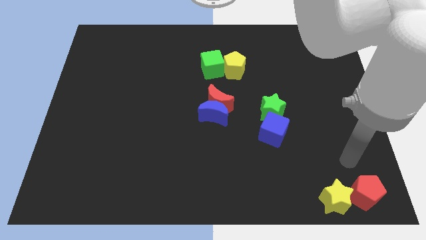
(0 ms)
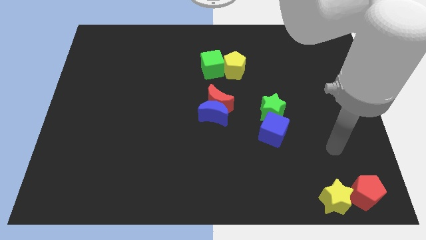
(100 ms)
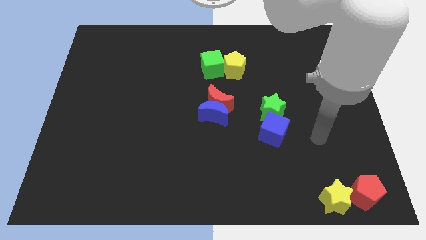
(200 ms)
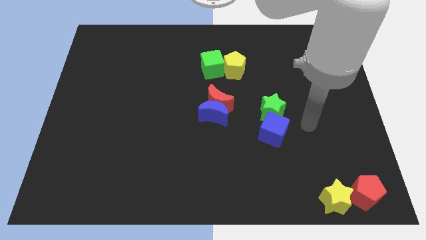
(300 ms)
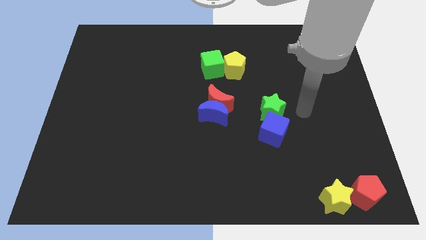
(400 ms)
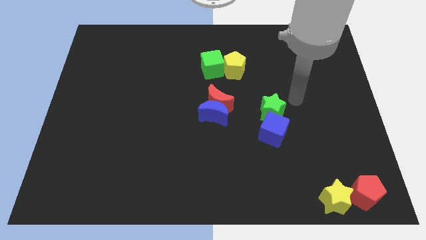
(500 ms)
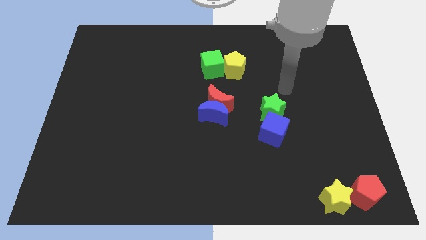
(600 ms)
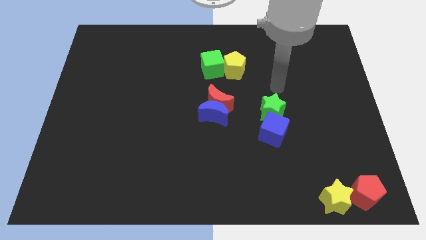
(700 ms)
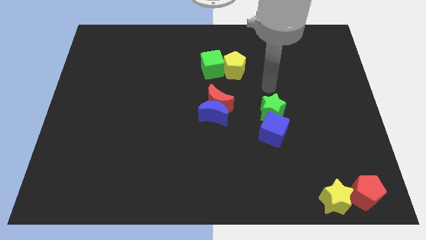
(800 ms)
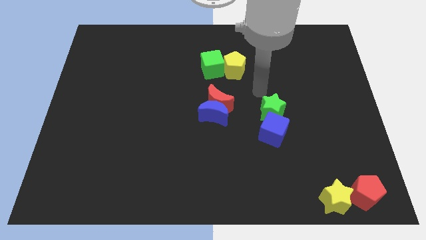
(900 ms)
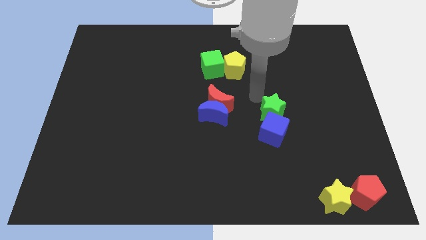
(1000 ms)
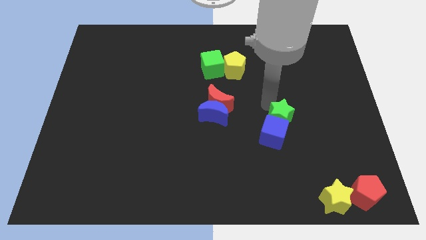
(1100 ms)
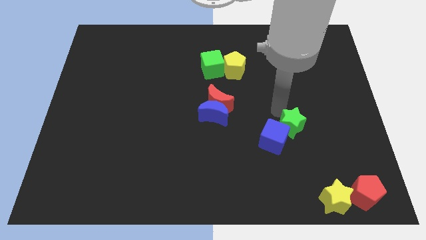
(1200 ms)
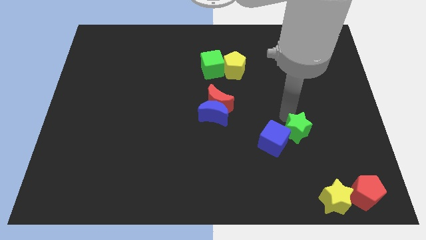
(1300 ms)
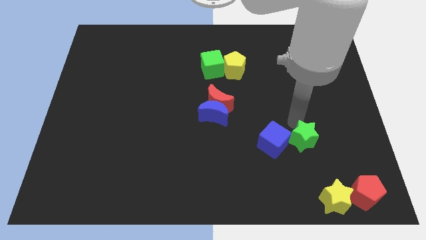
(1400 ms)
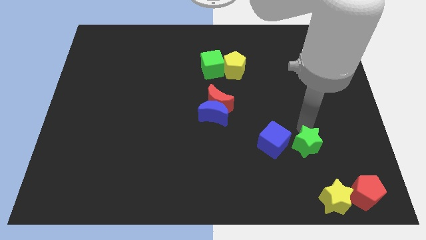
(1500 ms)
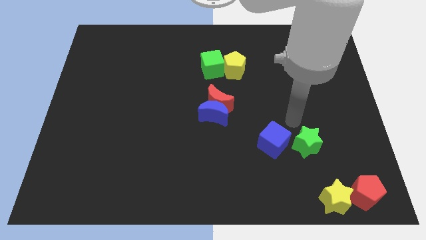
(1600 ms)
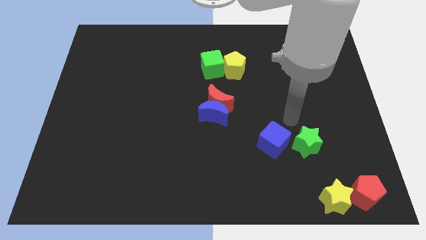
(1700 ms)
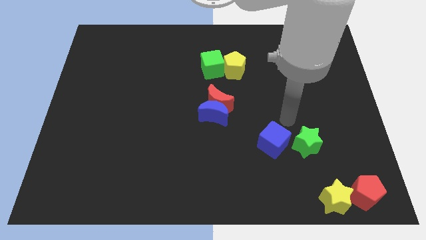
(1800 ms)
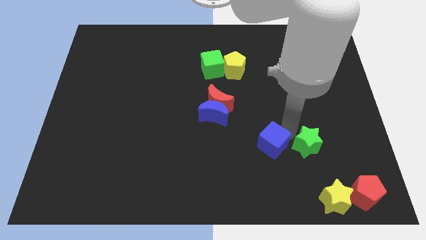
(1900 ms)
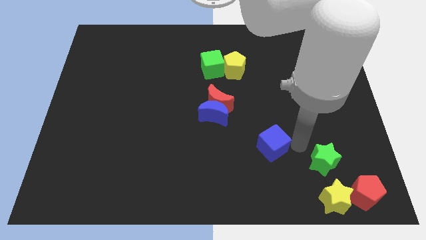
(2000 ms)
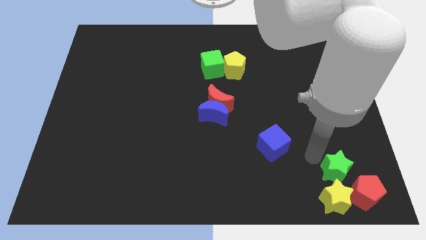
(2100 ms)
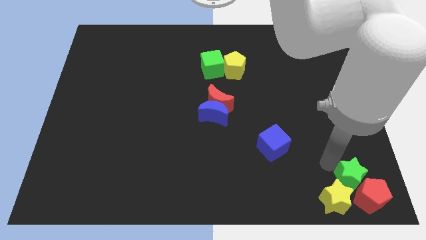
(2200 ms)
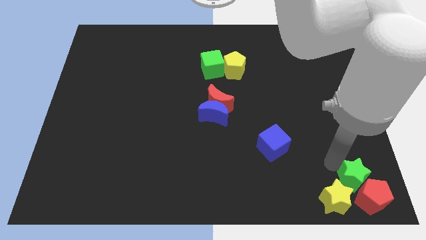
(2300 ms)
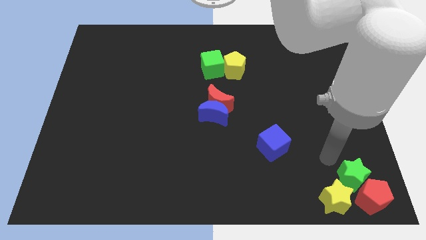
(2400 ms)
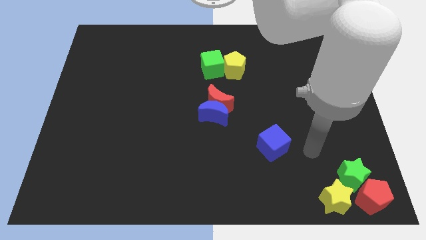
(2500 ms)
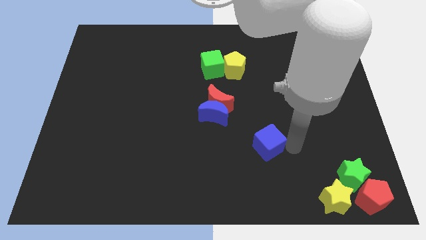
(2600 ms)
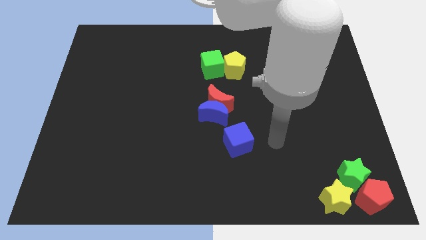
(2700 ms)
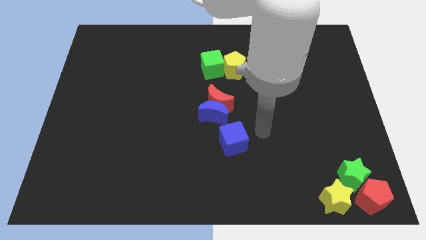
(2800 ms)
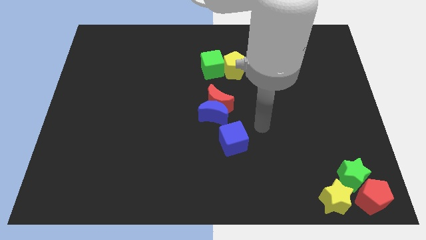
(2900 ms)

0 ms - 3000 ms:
push green star into yellow star and red pentagon

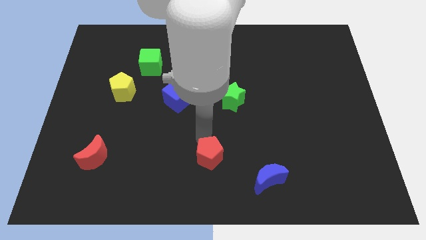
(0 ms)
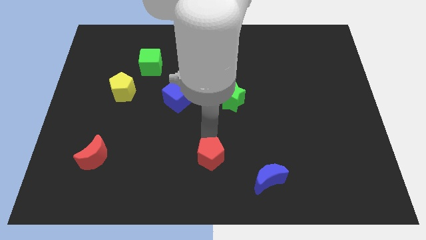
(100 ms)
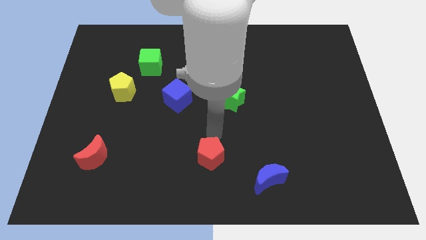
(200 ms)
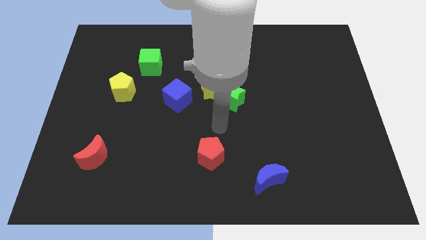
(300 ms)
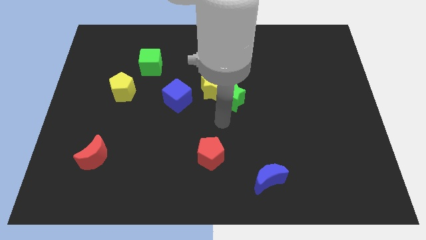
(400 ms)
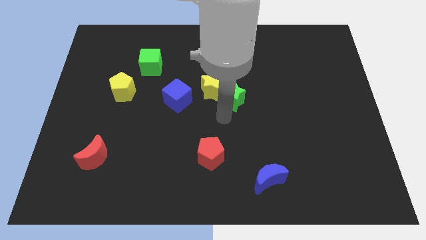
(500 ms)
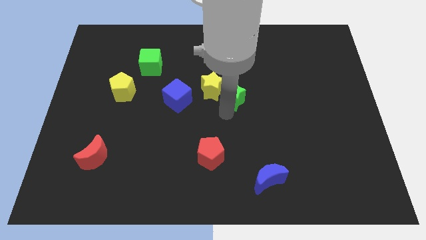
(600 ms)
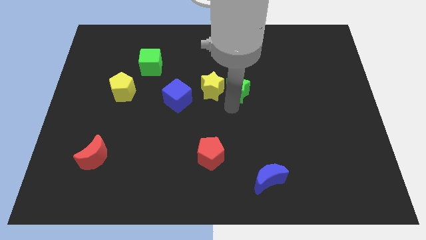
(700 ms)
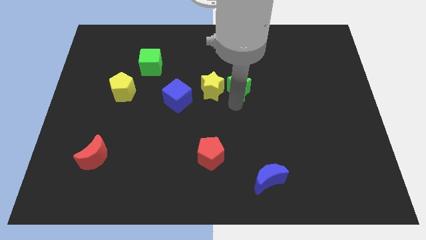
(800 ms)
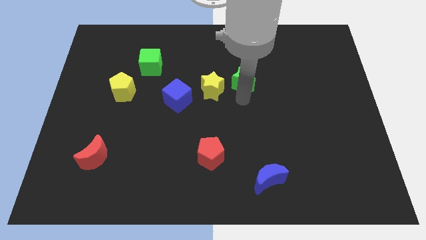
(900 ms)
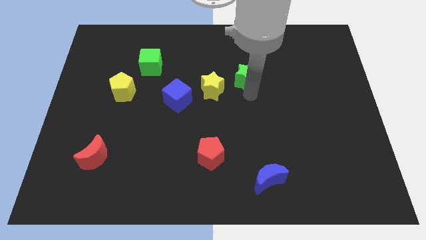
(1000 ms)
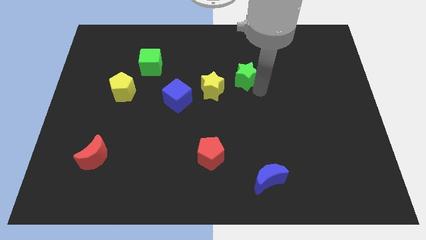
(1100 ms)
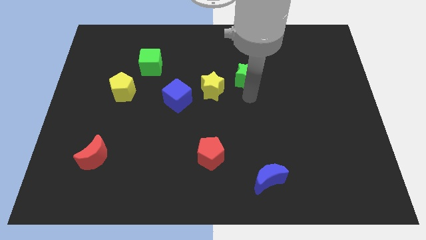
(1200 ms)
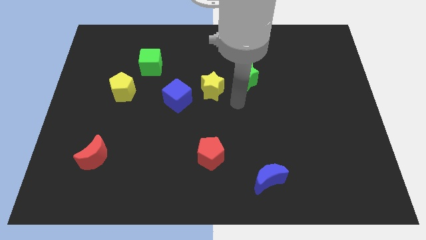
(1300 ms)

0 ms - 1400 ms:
push the green star towards the top side of the board

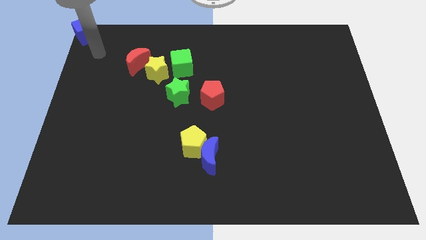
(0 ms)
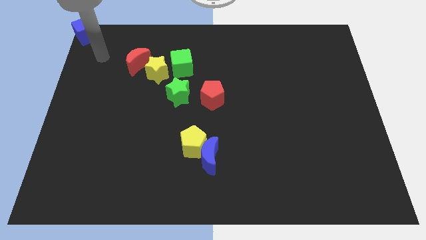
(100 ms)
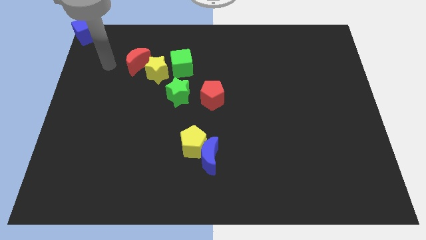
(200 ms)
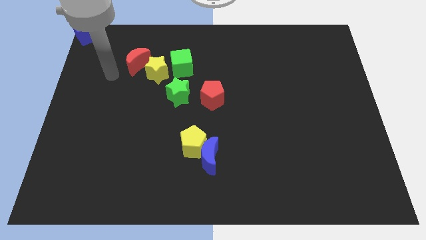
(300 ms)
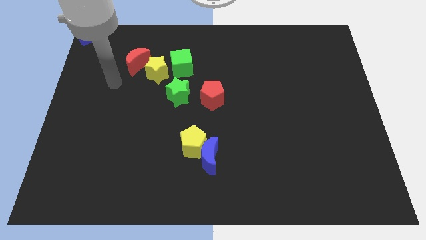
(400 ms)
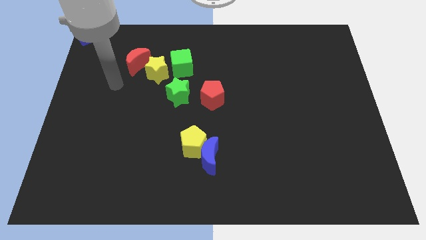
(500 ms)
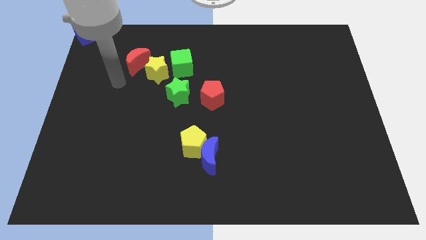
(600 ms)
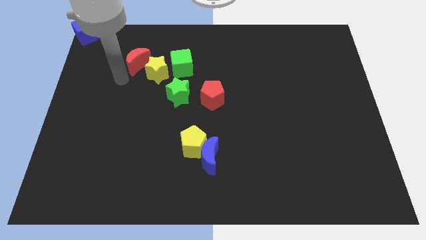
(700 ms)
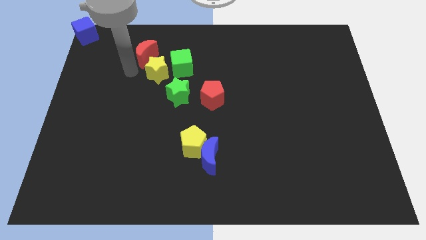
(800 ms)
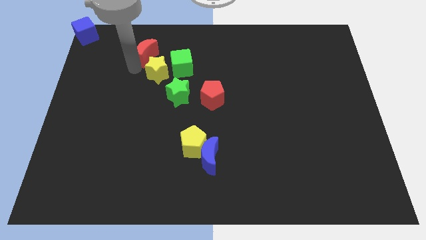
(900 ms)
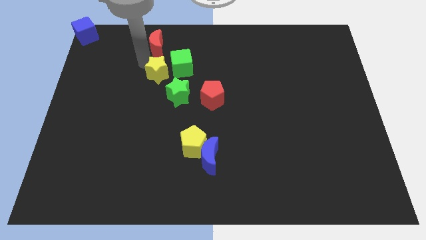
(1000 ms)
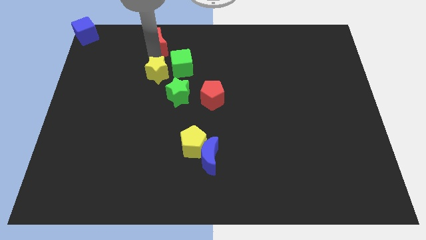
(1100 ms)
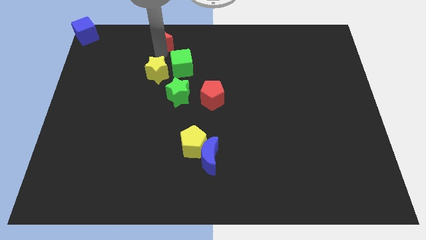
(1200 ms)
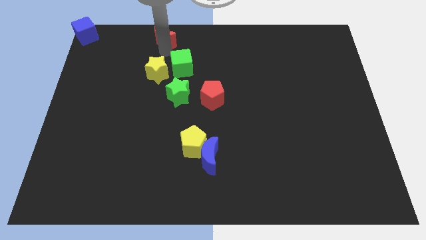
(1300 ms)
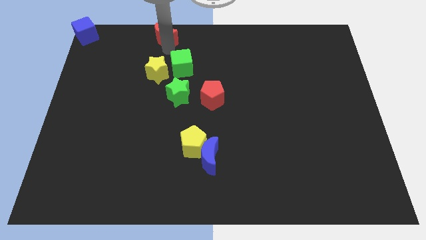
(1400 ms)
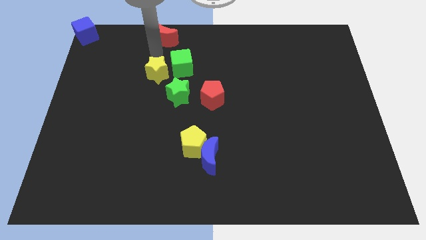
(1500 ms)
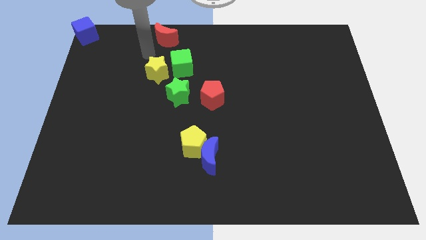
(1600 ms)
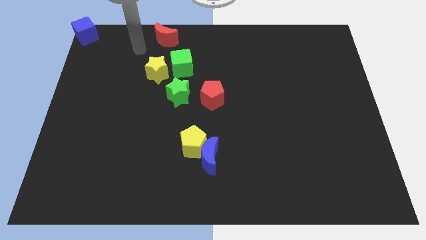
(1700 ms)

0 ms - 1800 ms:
push the red crescent away from the yellow star

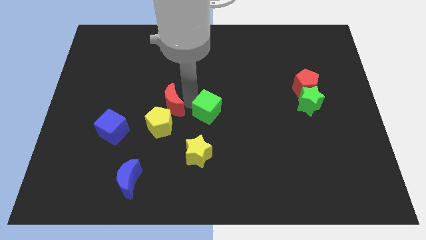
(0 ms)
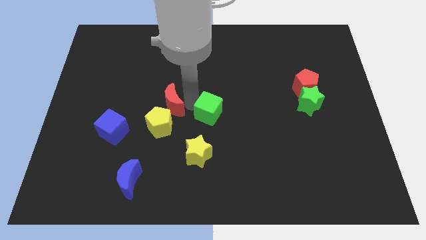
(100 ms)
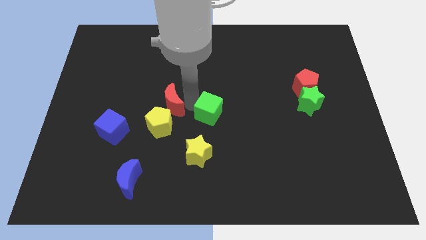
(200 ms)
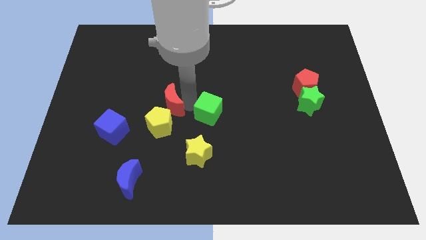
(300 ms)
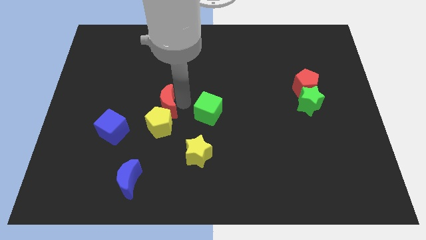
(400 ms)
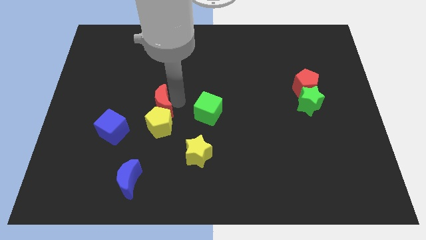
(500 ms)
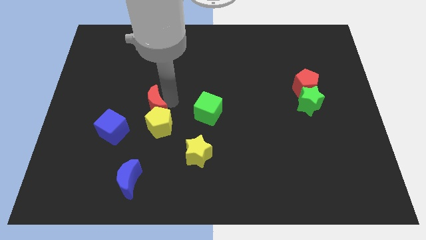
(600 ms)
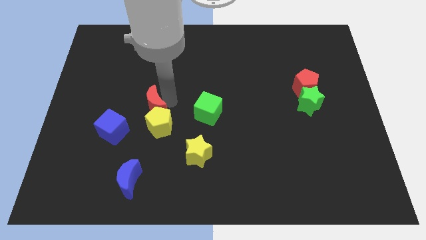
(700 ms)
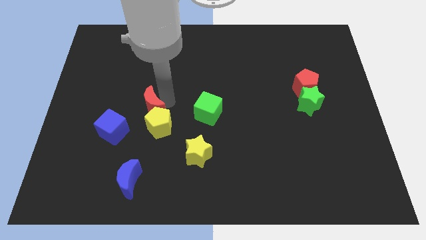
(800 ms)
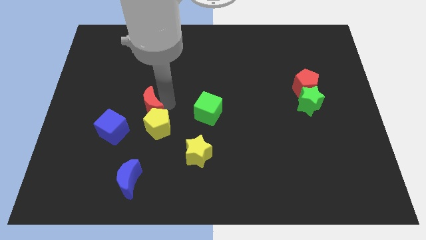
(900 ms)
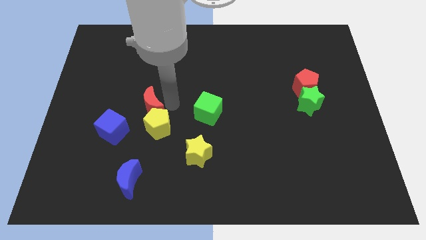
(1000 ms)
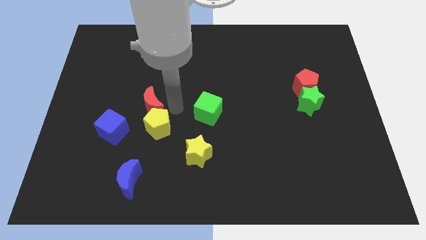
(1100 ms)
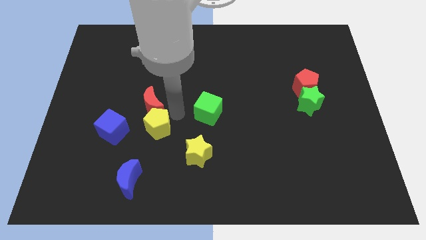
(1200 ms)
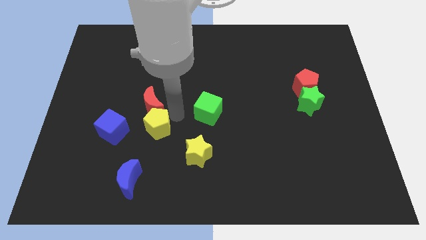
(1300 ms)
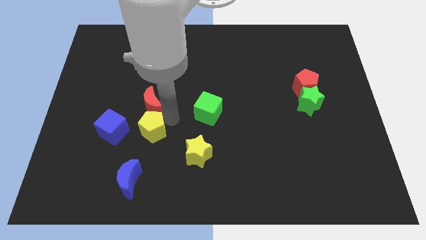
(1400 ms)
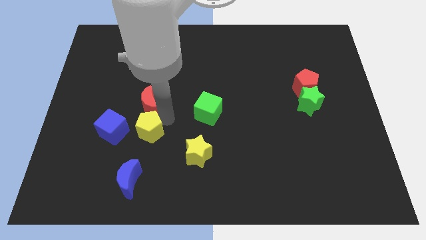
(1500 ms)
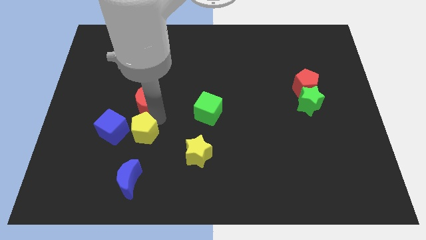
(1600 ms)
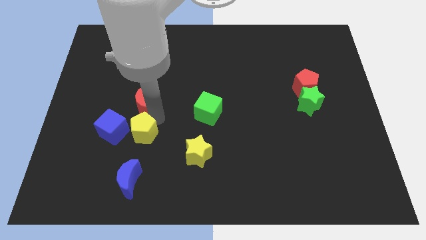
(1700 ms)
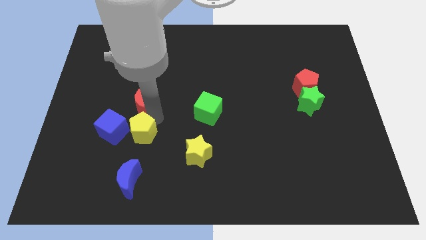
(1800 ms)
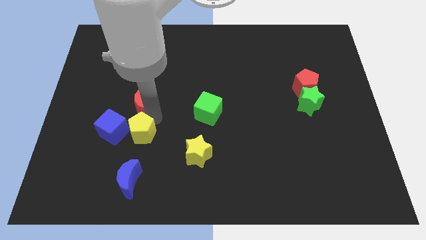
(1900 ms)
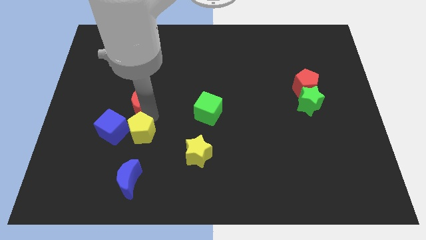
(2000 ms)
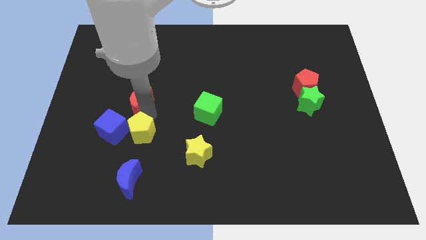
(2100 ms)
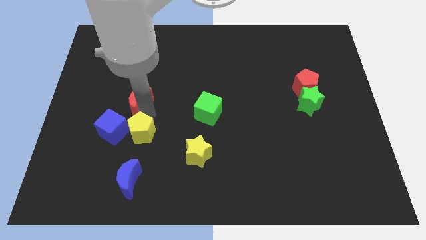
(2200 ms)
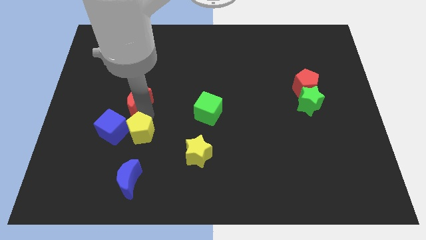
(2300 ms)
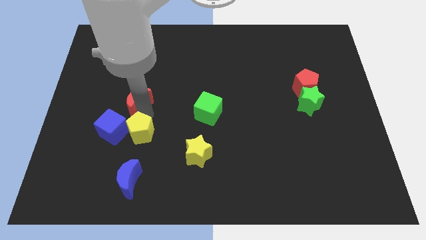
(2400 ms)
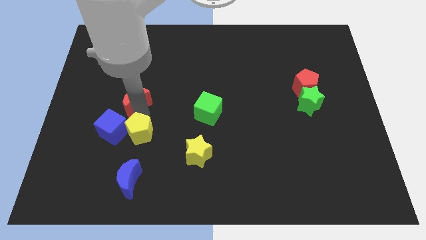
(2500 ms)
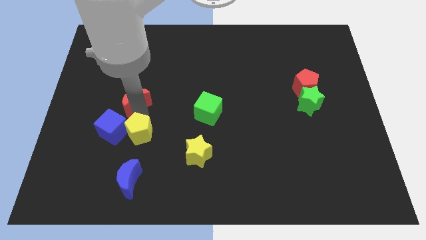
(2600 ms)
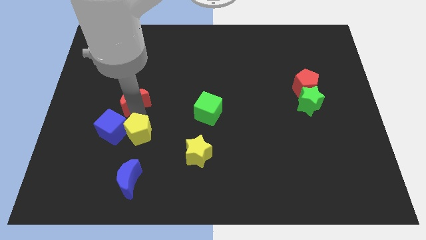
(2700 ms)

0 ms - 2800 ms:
move red moon near blue cube

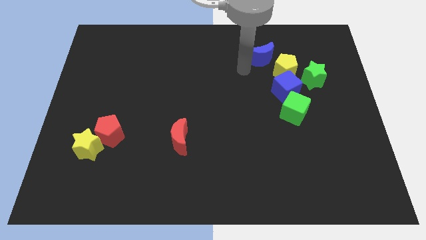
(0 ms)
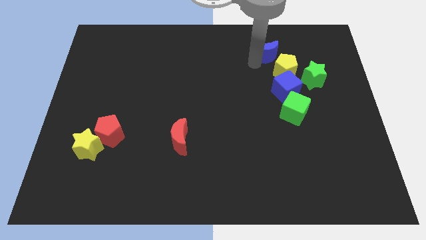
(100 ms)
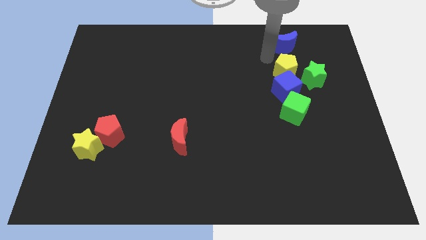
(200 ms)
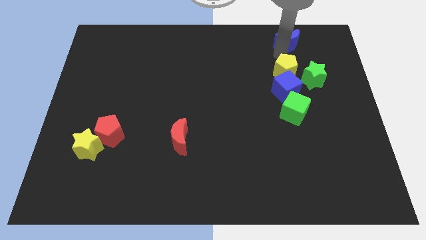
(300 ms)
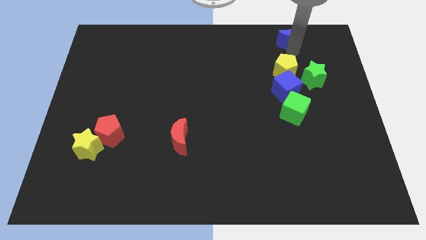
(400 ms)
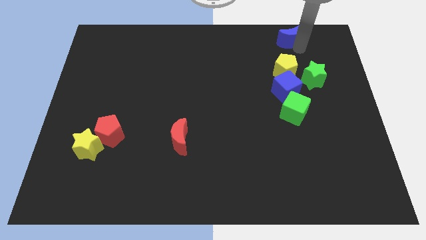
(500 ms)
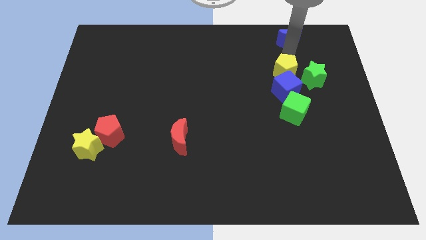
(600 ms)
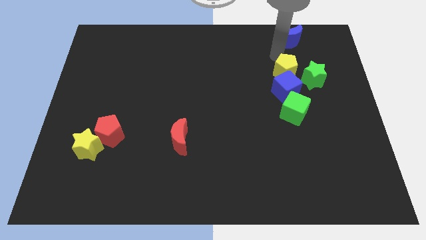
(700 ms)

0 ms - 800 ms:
move the blue crescent to the top right of the board
